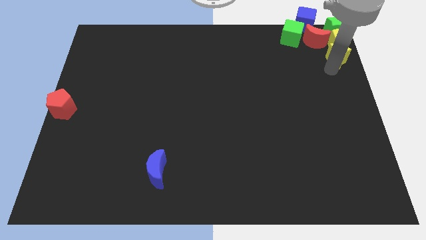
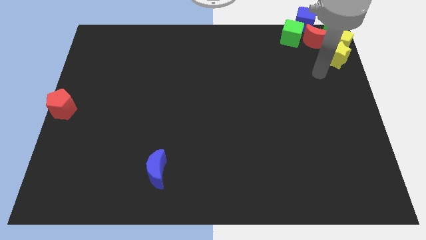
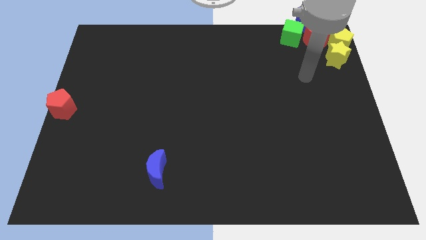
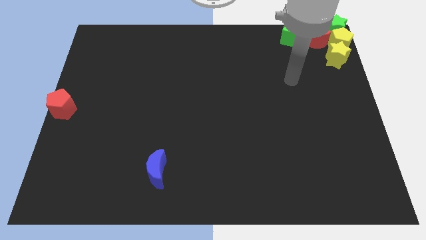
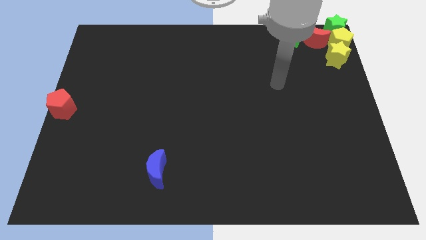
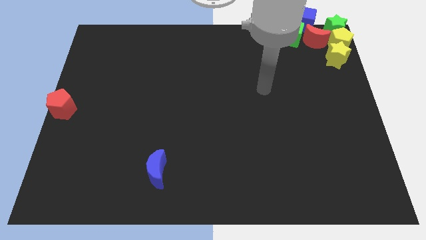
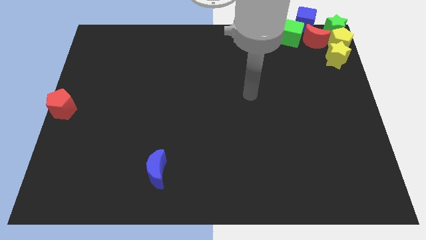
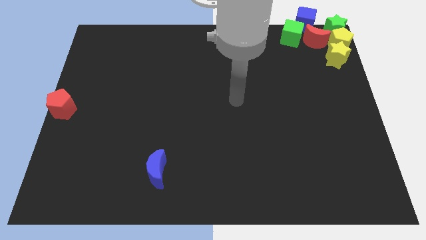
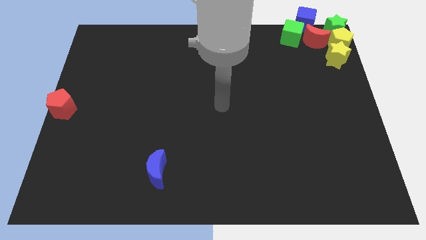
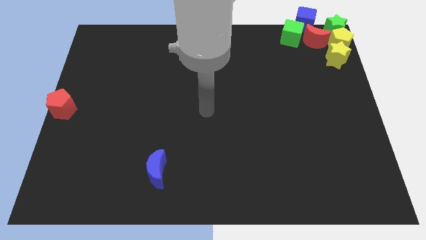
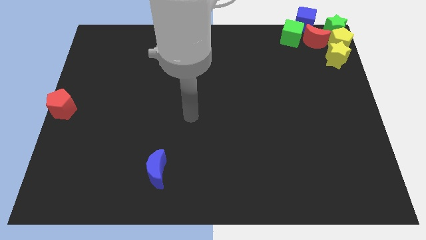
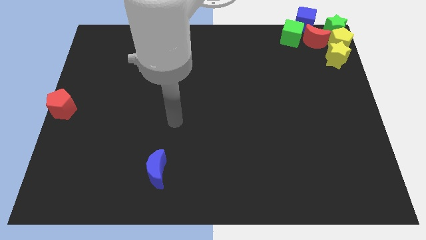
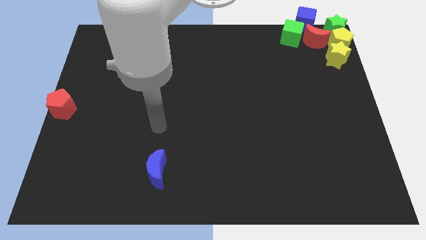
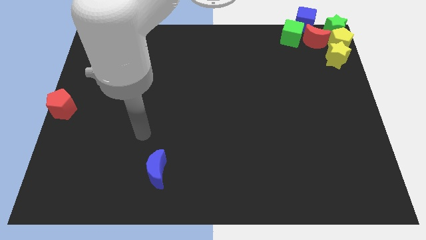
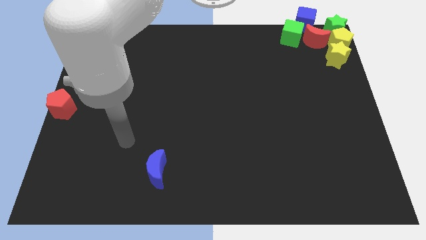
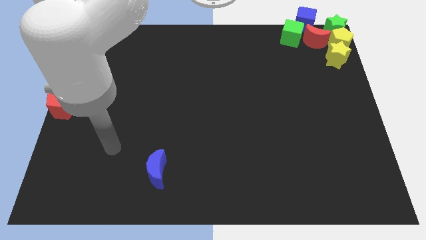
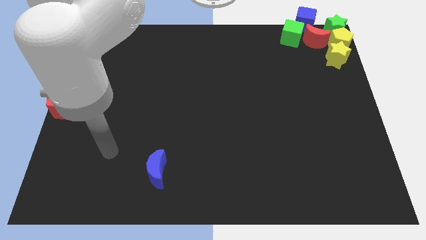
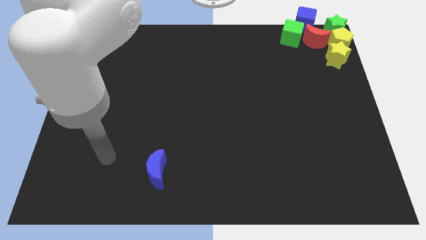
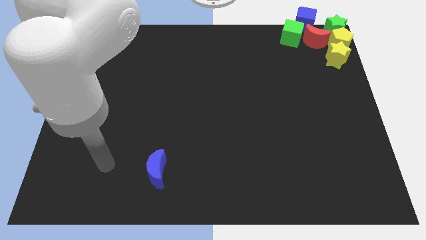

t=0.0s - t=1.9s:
move the arm away from the yellow star

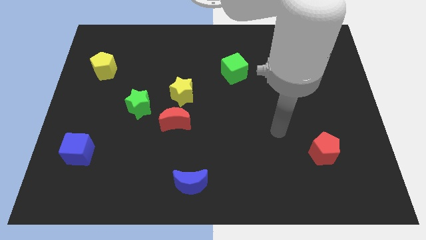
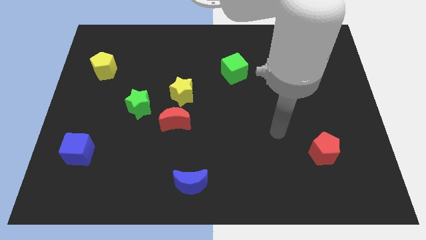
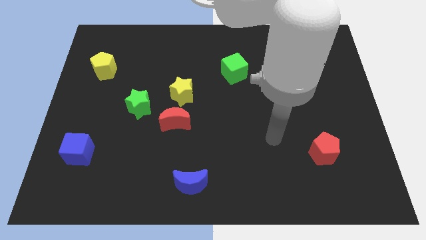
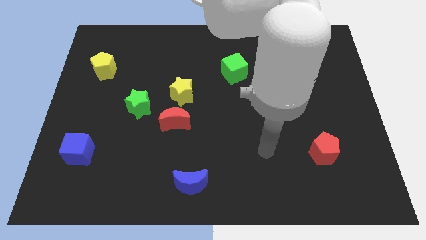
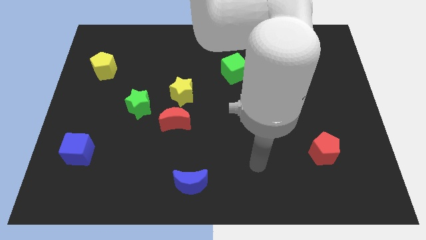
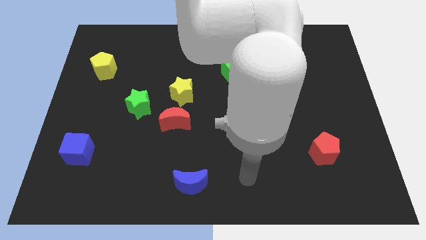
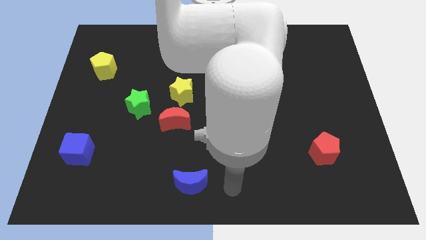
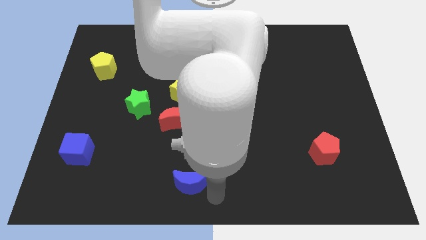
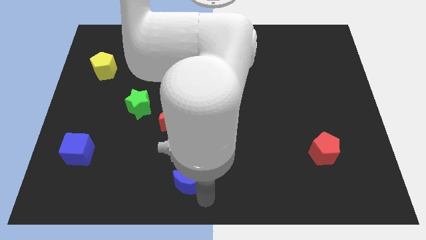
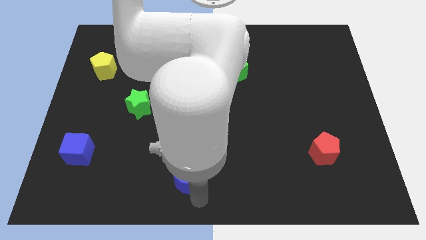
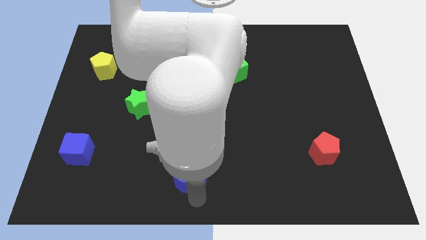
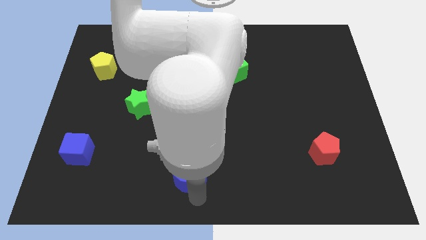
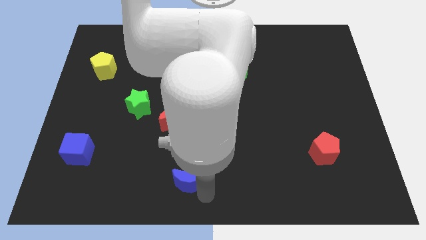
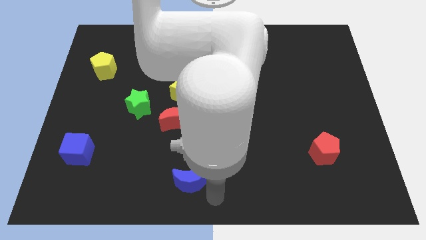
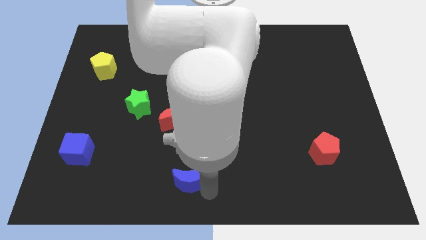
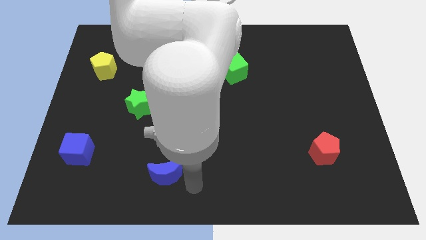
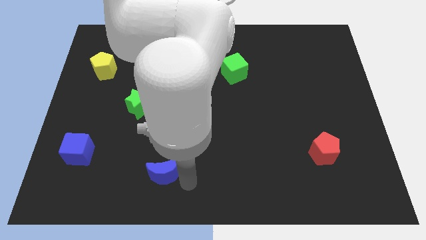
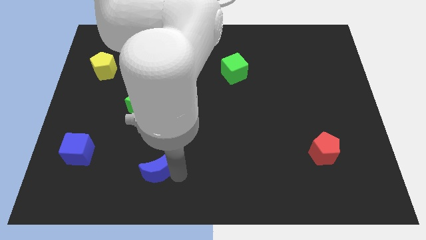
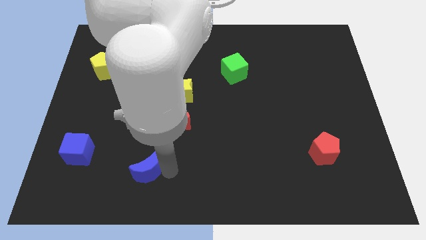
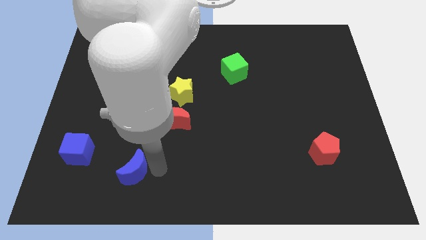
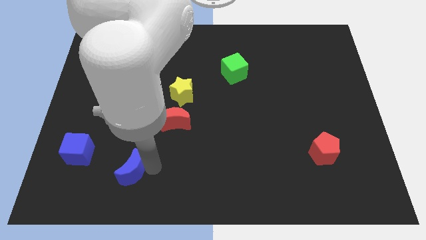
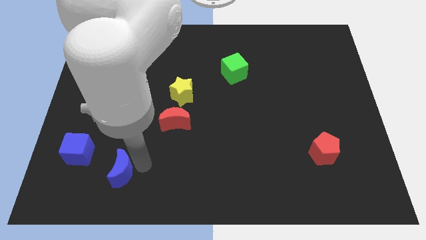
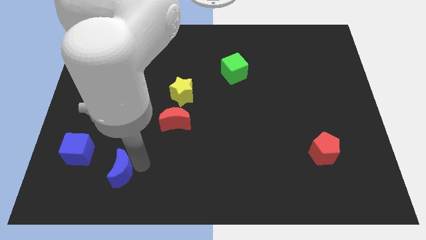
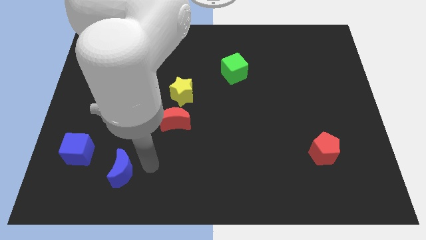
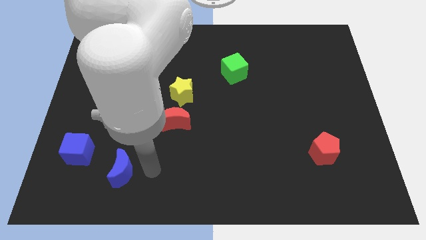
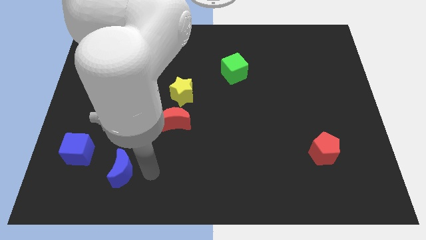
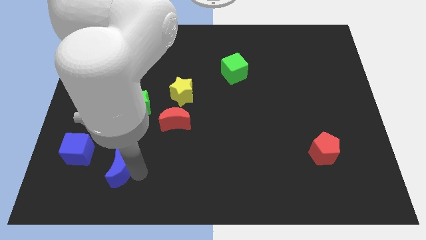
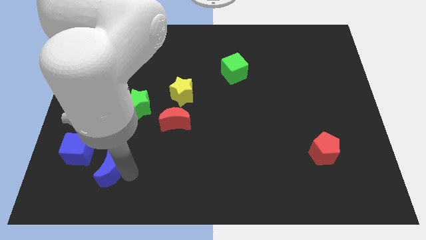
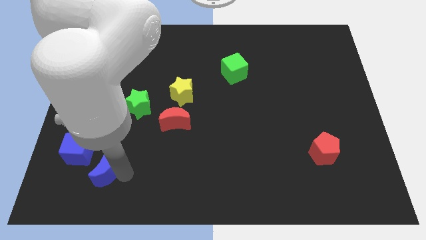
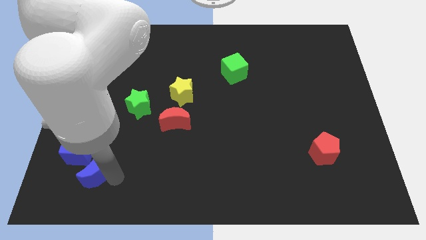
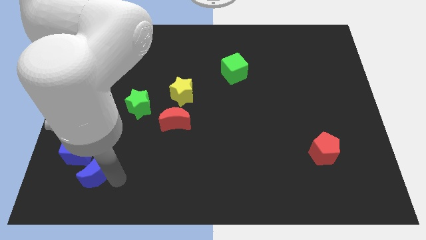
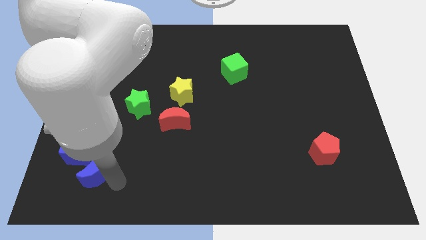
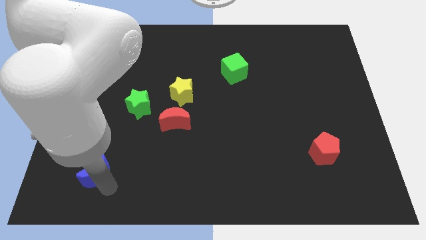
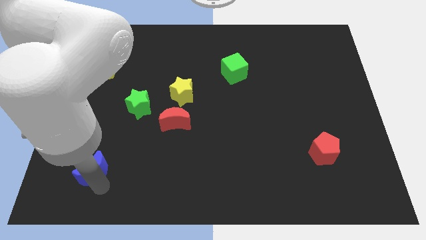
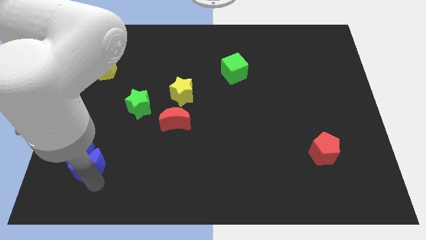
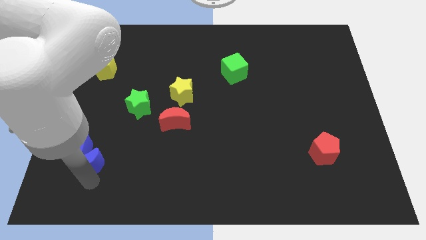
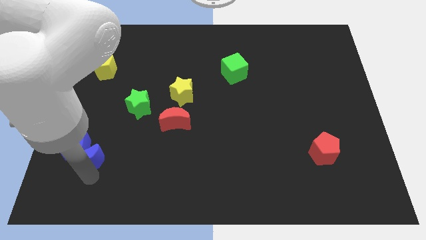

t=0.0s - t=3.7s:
push the blue moon into the blue cube

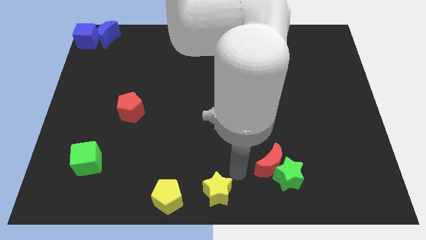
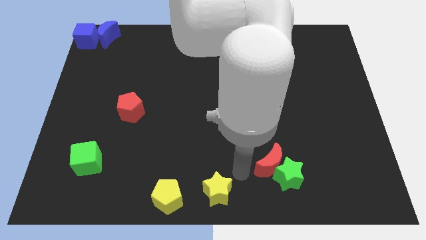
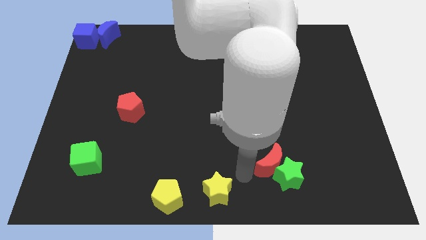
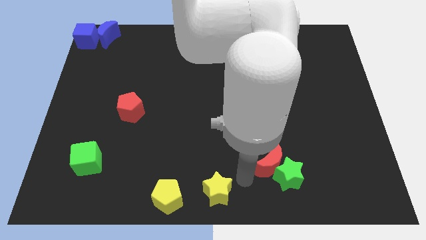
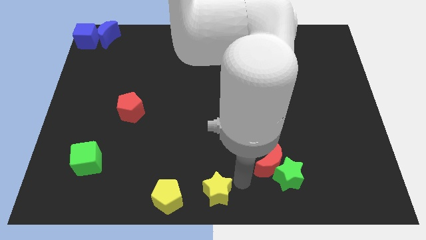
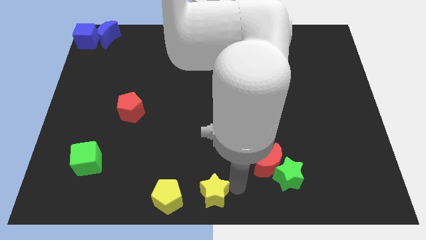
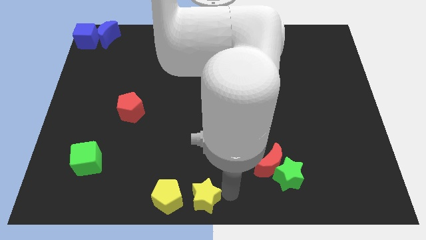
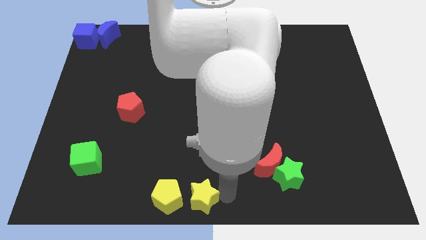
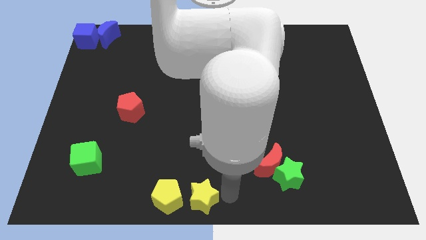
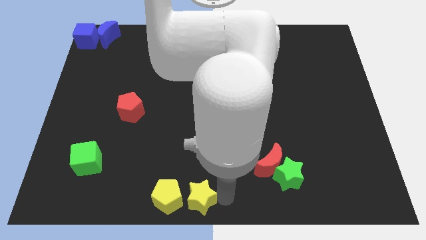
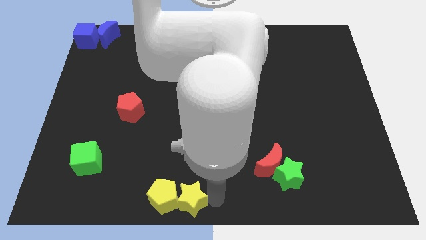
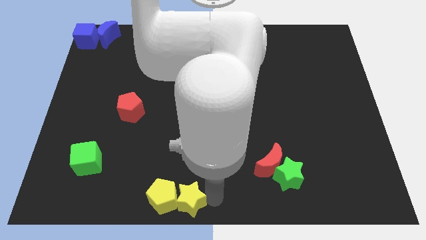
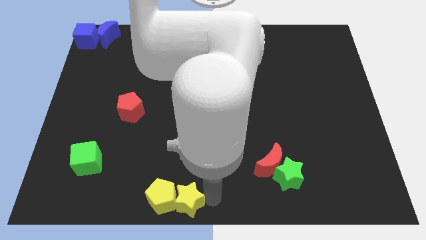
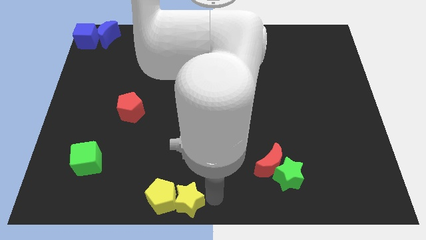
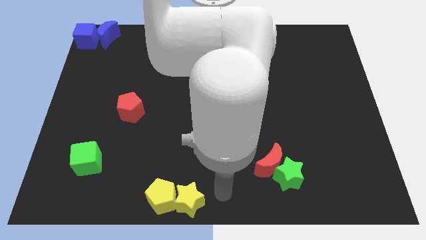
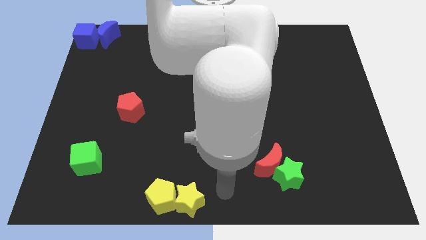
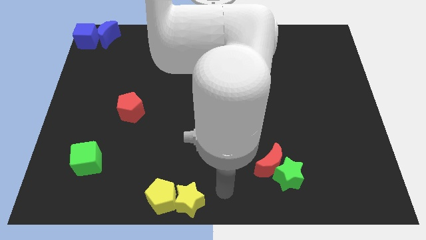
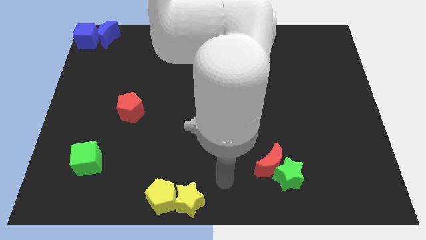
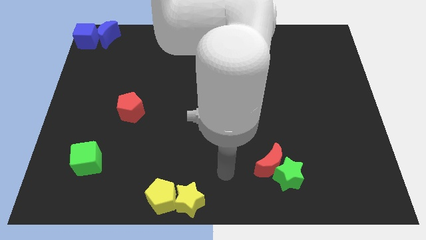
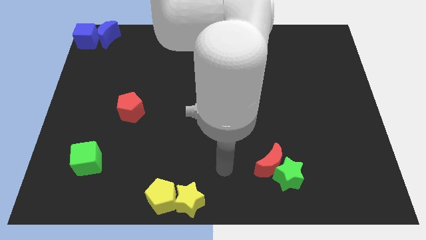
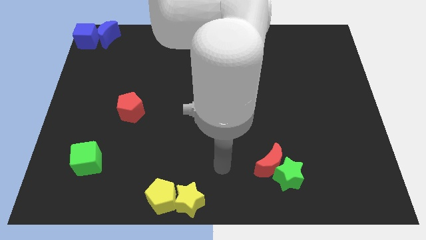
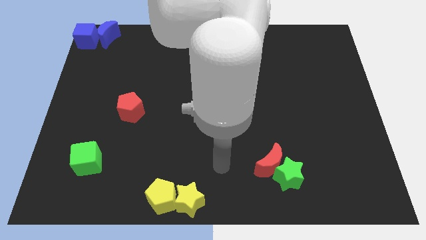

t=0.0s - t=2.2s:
push the yellow star into the yellow pentagon

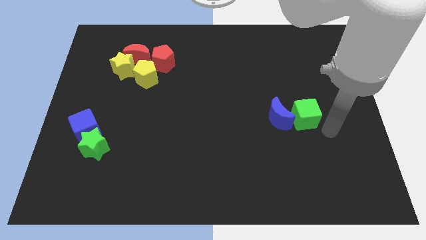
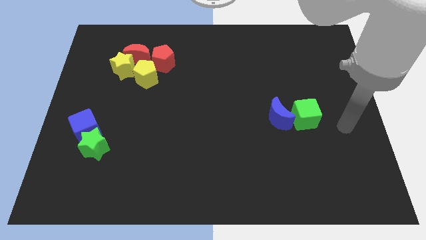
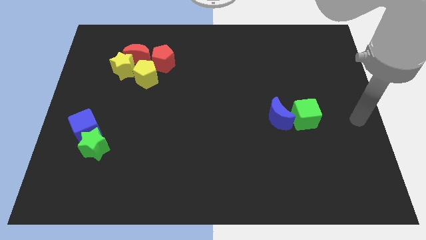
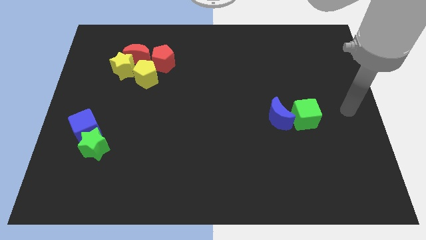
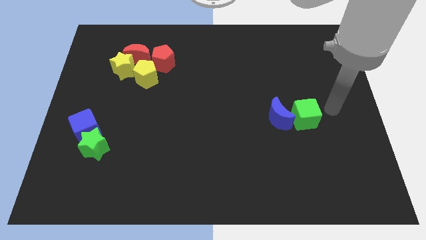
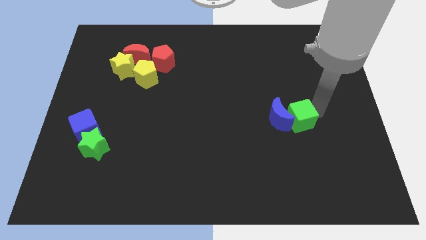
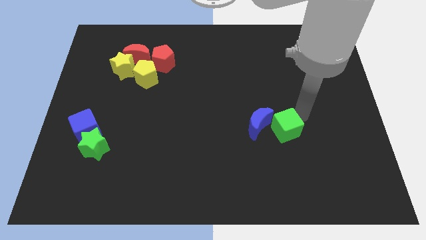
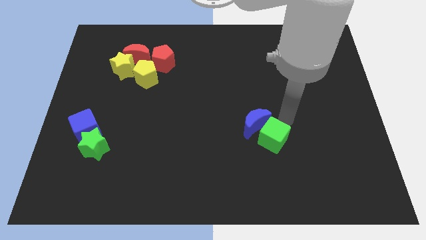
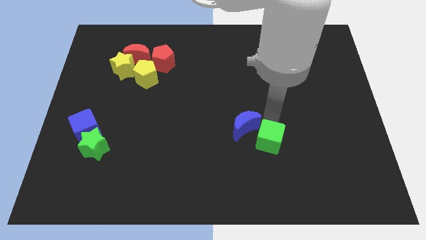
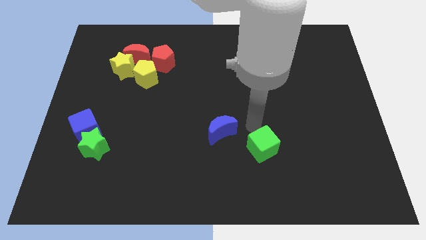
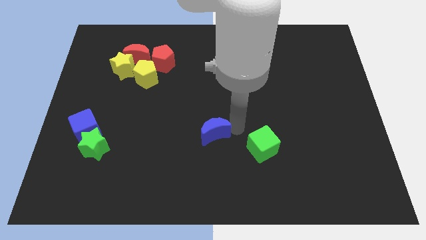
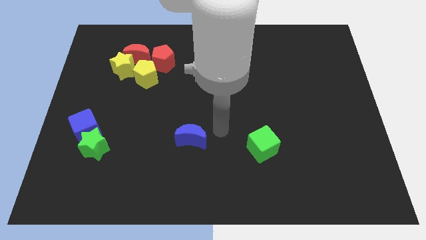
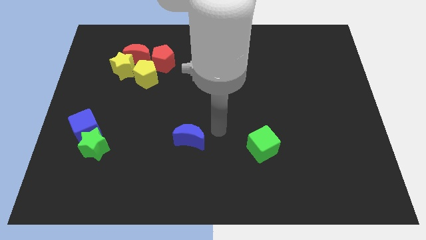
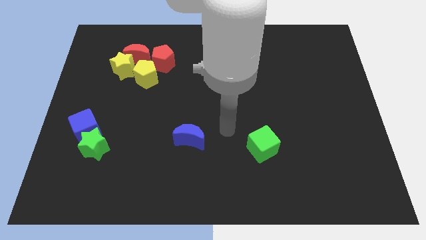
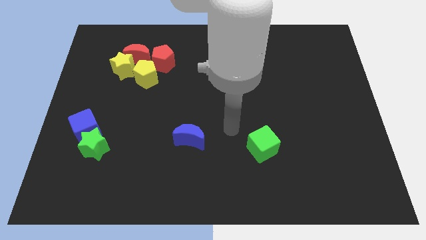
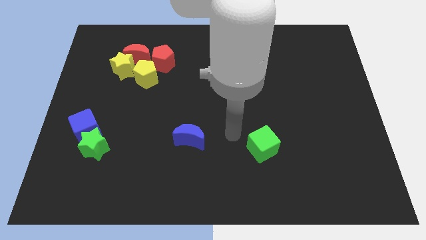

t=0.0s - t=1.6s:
separate the green cube from the blue moon
